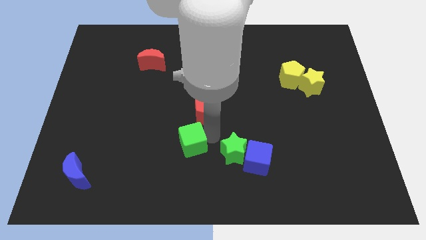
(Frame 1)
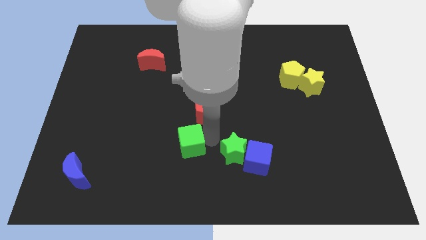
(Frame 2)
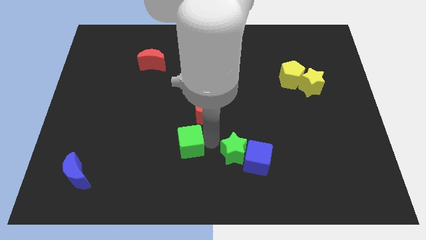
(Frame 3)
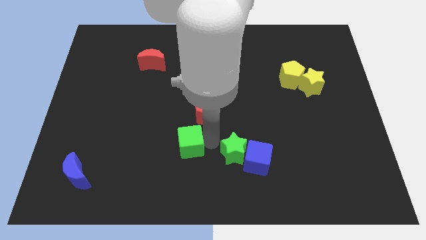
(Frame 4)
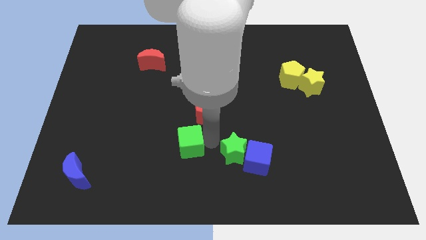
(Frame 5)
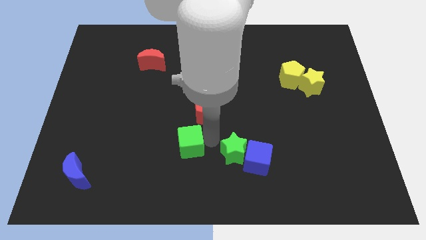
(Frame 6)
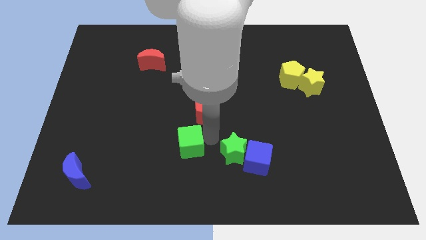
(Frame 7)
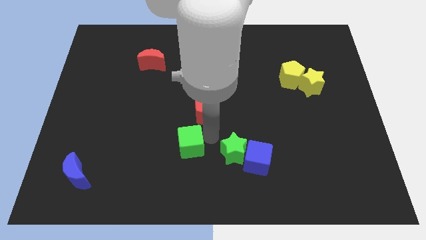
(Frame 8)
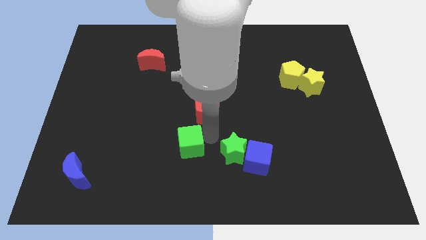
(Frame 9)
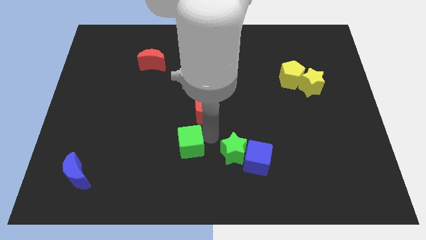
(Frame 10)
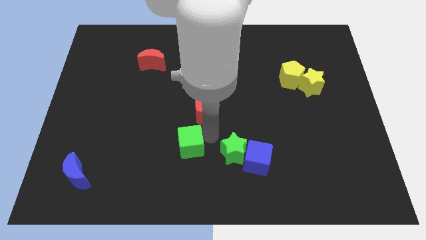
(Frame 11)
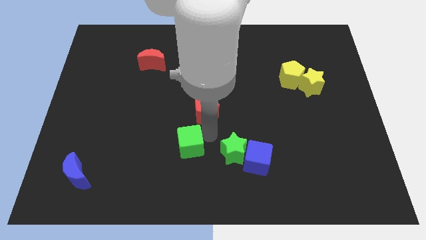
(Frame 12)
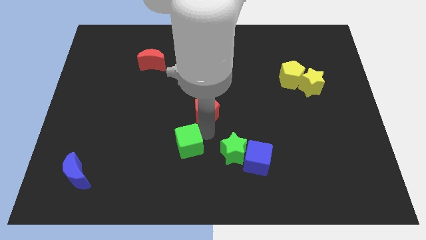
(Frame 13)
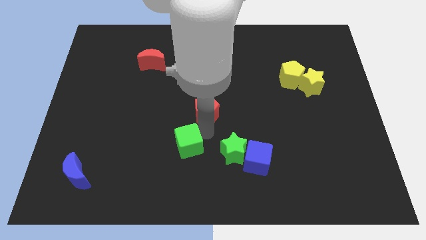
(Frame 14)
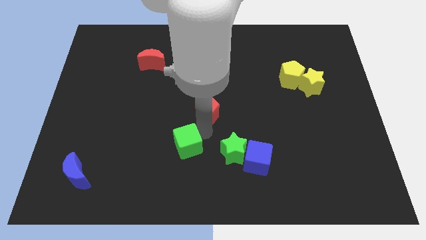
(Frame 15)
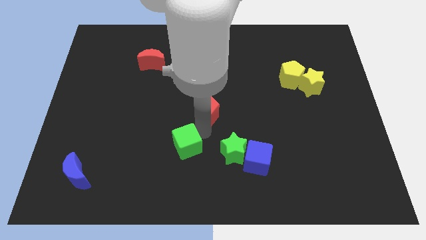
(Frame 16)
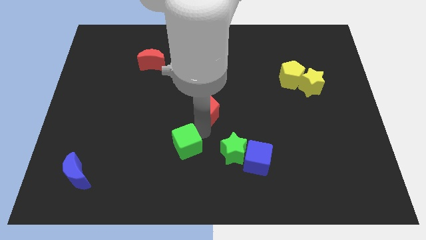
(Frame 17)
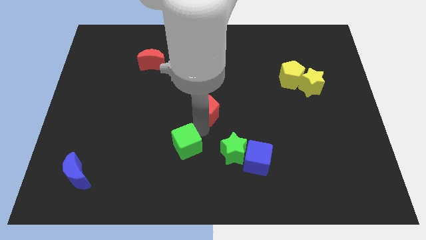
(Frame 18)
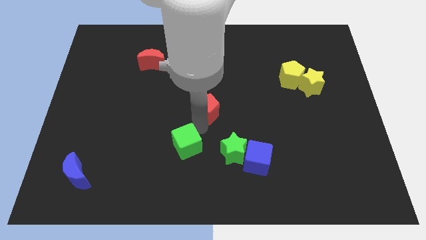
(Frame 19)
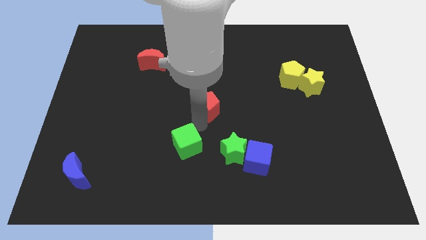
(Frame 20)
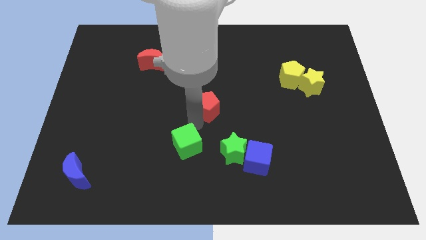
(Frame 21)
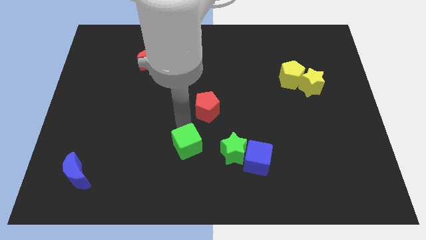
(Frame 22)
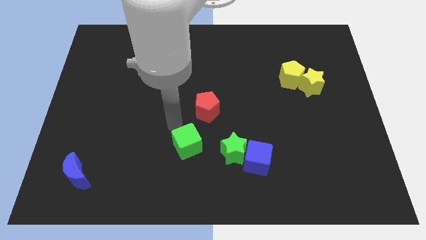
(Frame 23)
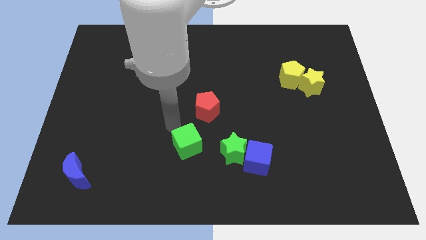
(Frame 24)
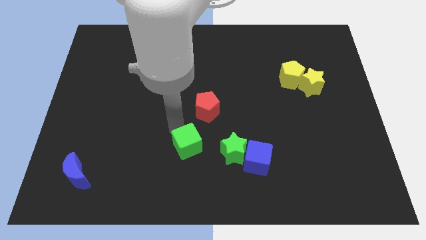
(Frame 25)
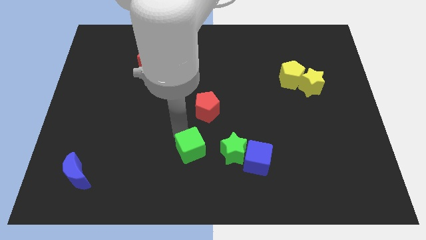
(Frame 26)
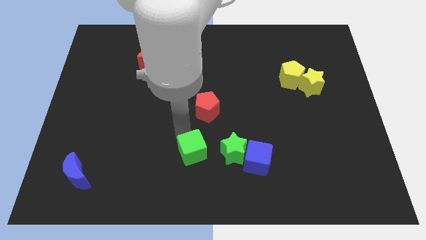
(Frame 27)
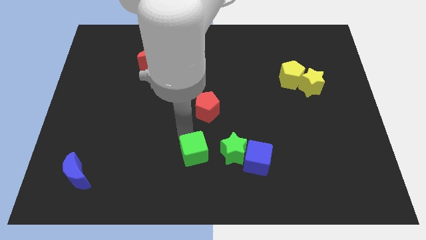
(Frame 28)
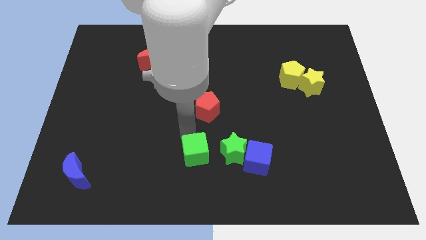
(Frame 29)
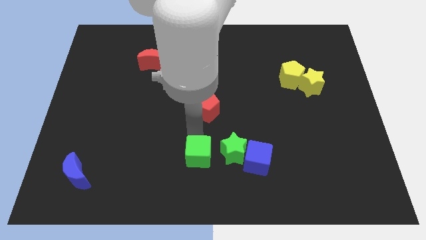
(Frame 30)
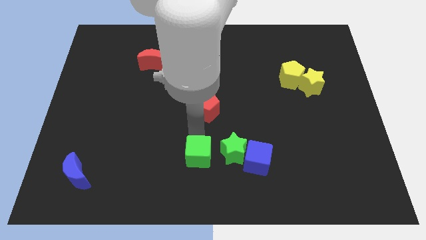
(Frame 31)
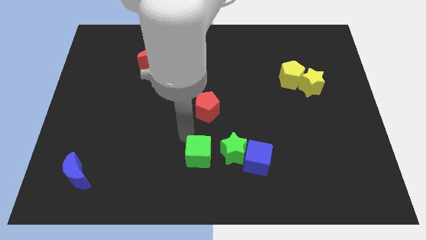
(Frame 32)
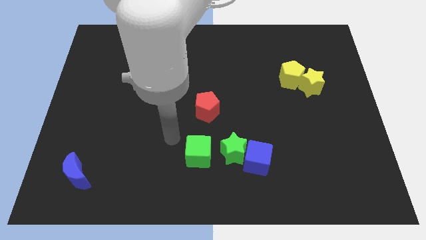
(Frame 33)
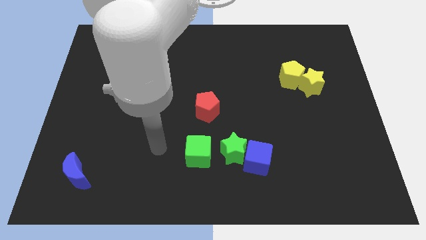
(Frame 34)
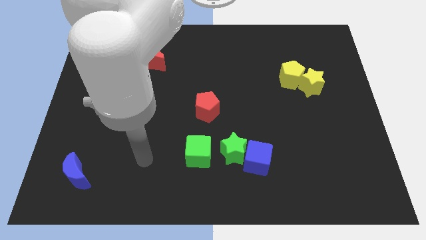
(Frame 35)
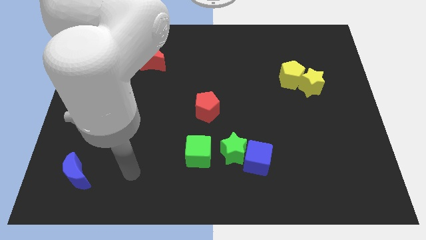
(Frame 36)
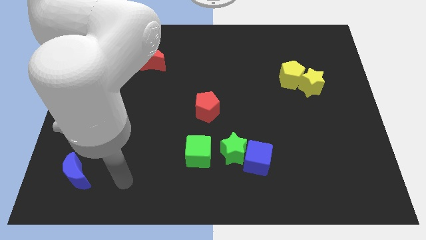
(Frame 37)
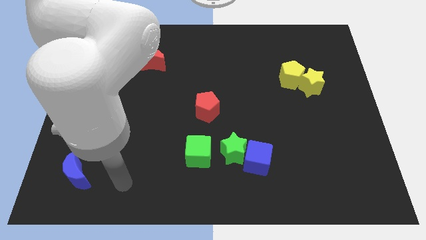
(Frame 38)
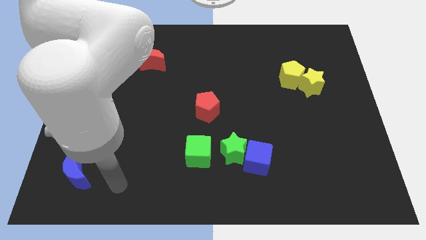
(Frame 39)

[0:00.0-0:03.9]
move the green cube left to the green star

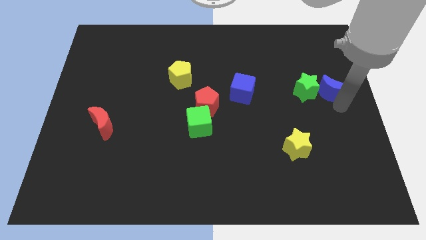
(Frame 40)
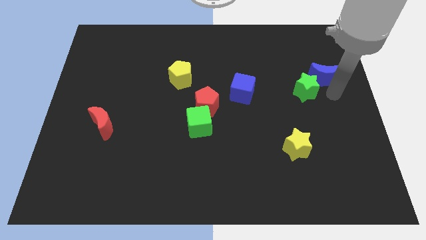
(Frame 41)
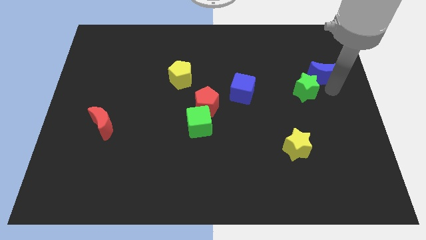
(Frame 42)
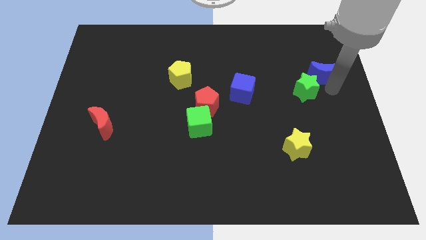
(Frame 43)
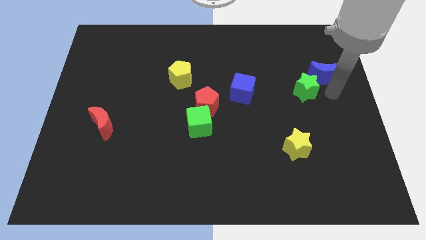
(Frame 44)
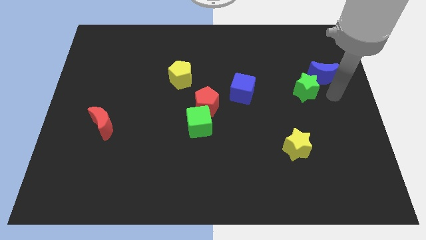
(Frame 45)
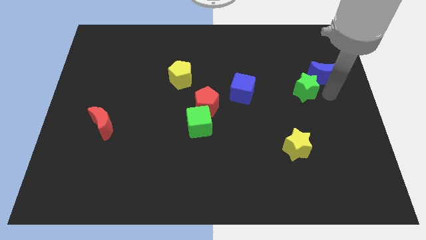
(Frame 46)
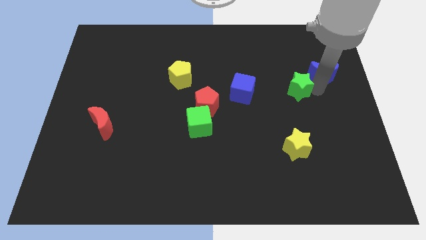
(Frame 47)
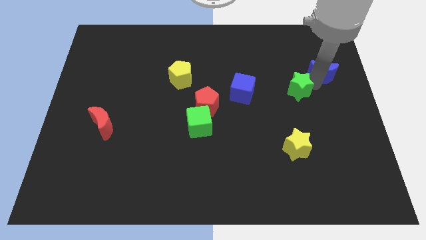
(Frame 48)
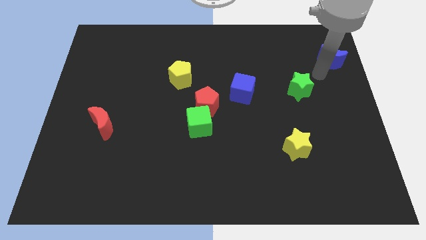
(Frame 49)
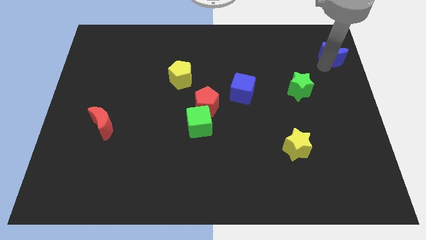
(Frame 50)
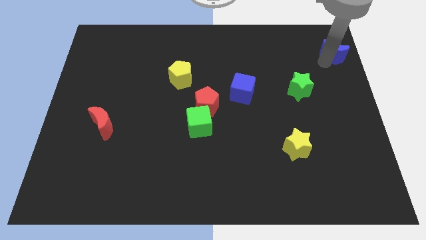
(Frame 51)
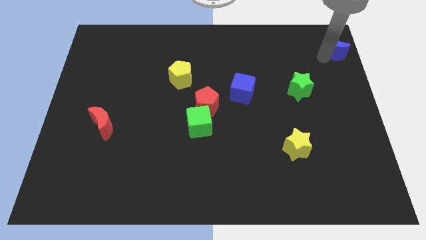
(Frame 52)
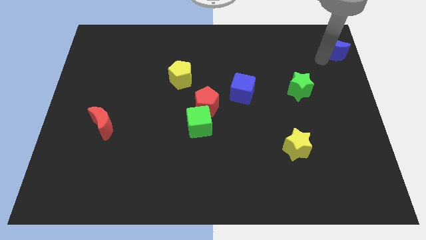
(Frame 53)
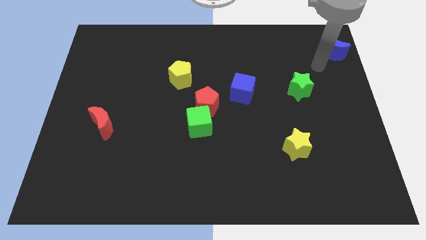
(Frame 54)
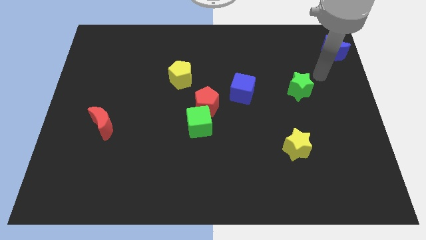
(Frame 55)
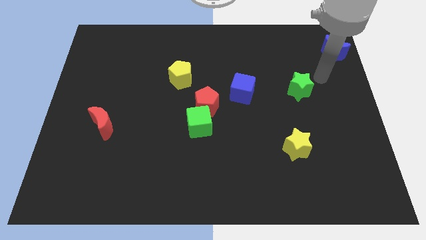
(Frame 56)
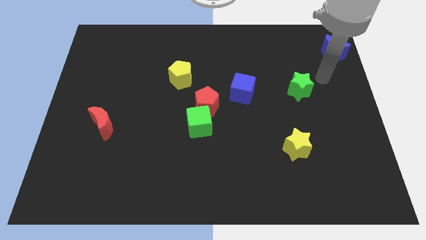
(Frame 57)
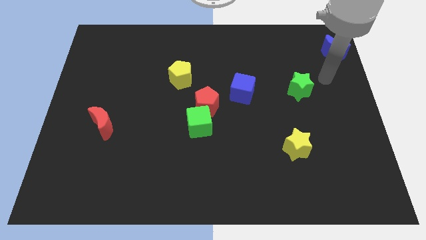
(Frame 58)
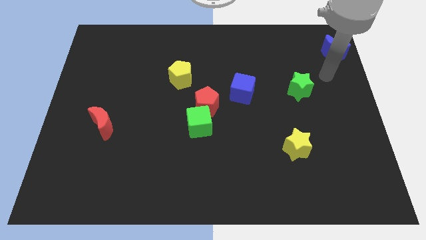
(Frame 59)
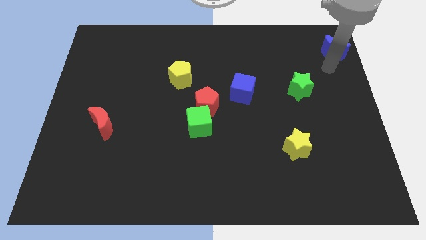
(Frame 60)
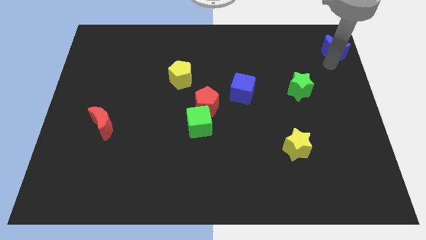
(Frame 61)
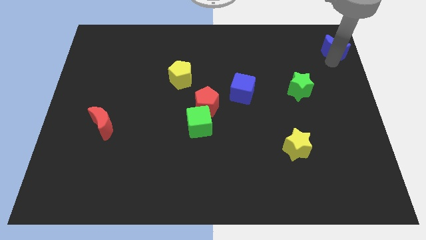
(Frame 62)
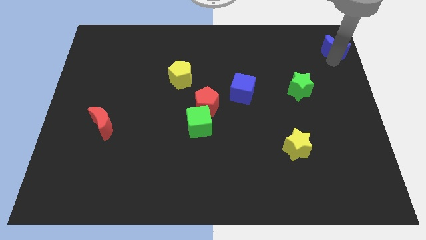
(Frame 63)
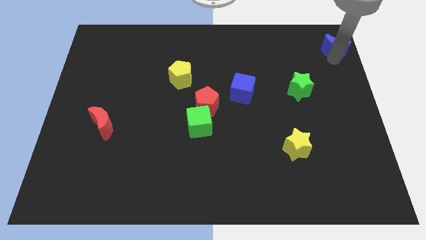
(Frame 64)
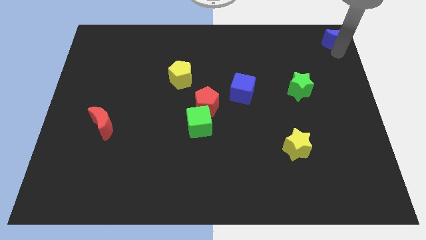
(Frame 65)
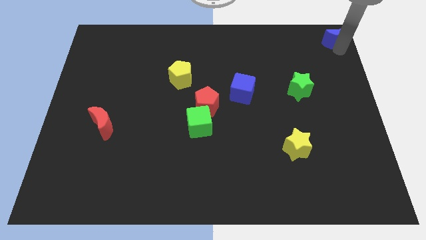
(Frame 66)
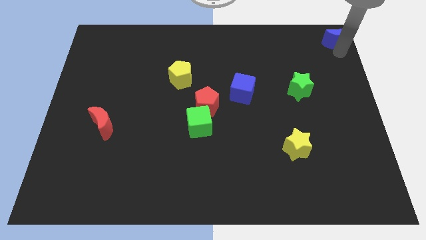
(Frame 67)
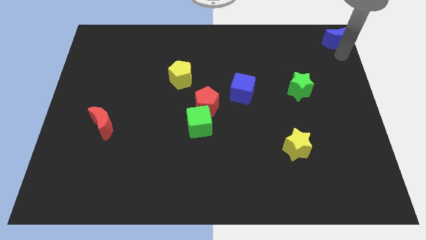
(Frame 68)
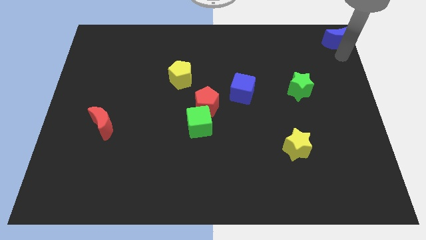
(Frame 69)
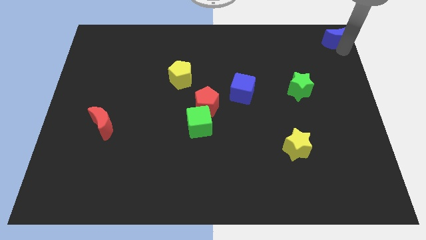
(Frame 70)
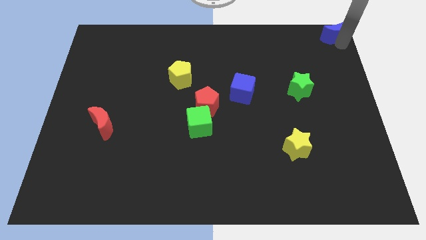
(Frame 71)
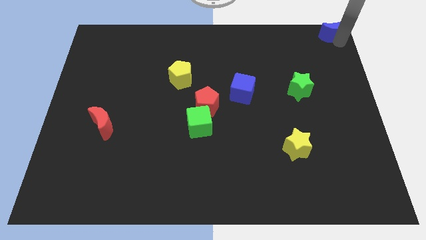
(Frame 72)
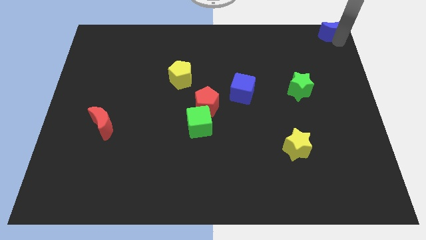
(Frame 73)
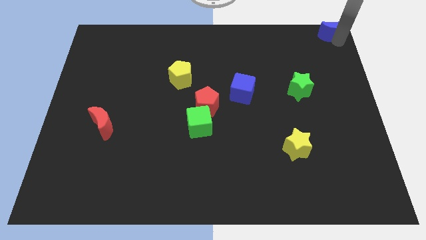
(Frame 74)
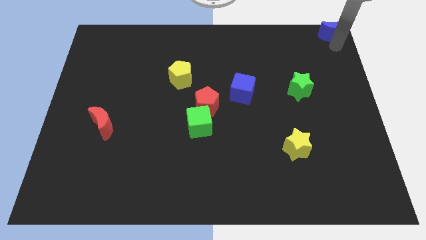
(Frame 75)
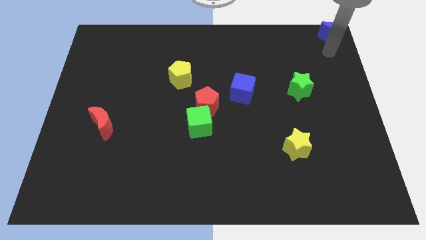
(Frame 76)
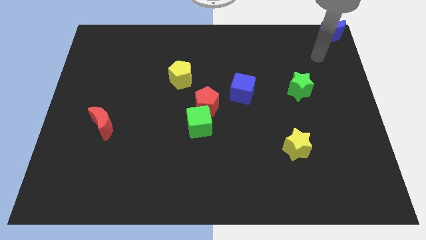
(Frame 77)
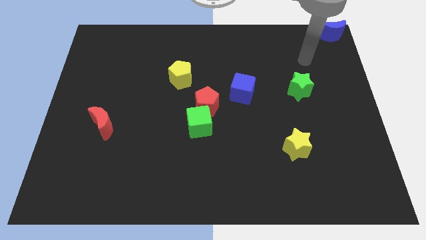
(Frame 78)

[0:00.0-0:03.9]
push the blue crescent at the top right corner of the board

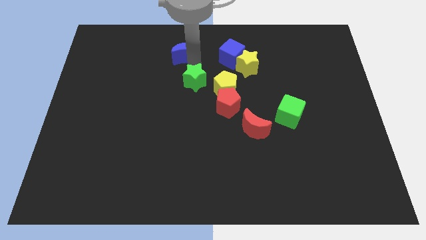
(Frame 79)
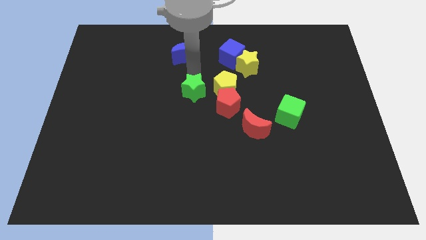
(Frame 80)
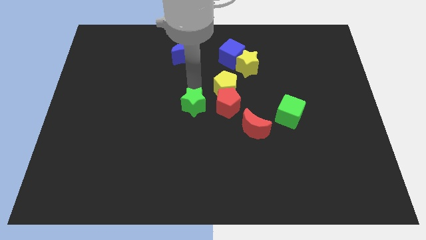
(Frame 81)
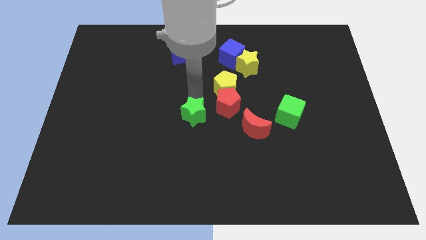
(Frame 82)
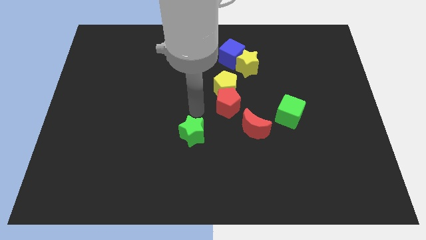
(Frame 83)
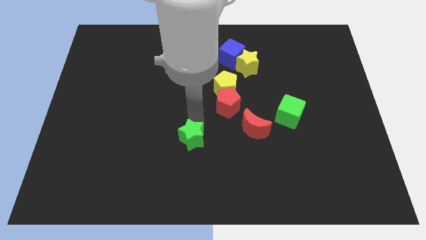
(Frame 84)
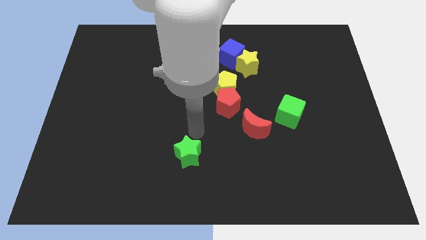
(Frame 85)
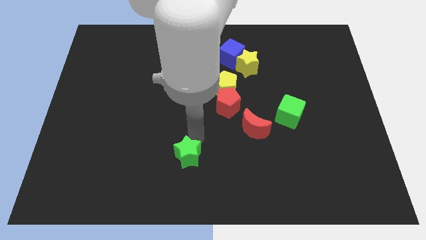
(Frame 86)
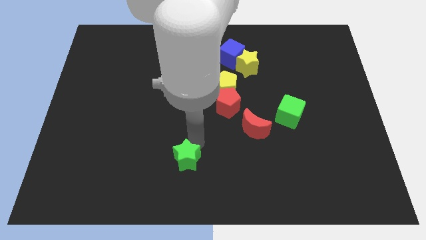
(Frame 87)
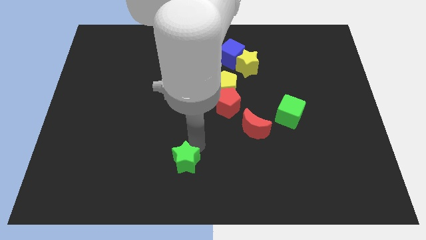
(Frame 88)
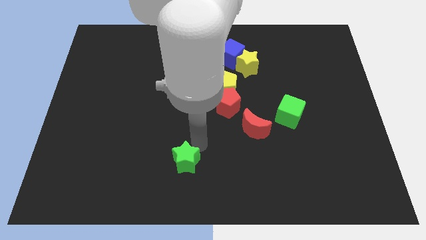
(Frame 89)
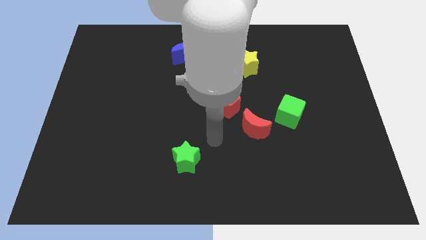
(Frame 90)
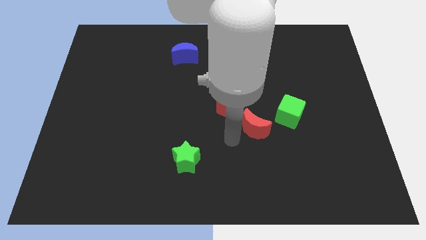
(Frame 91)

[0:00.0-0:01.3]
push the green star towards the bottom side
